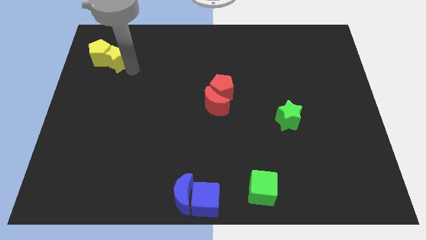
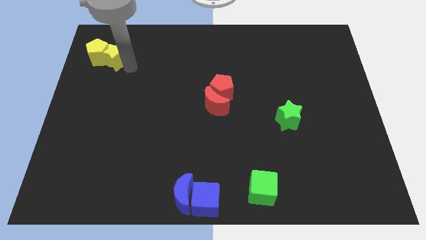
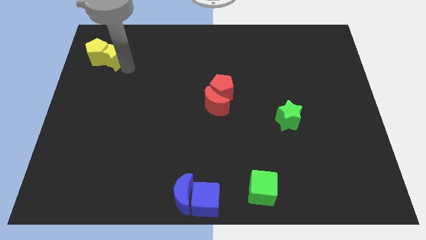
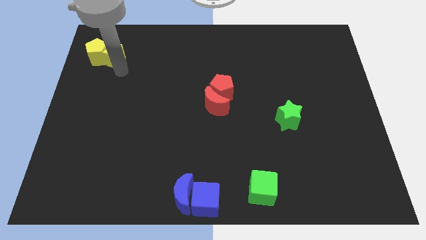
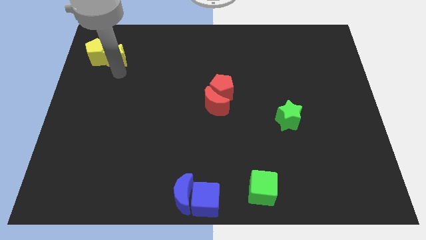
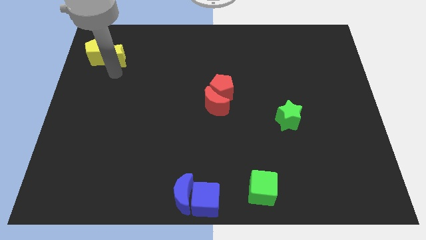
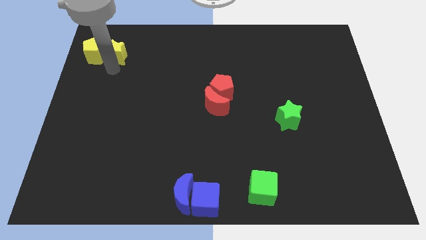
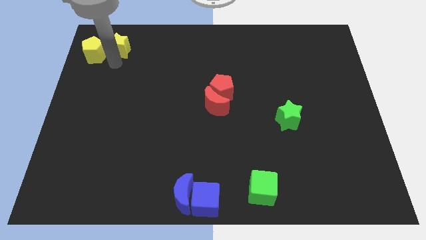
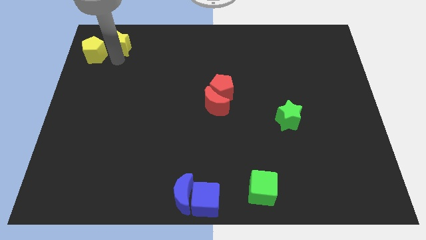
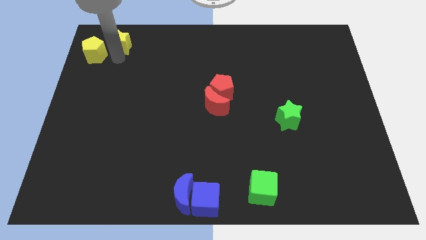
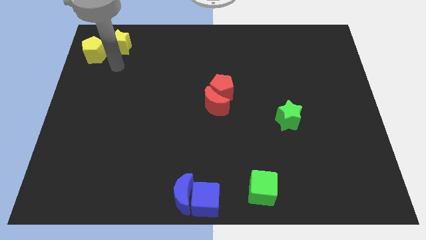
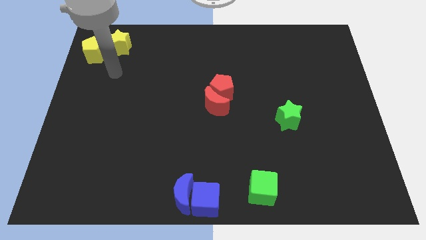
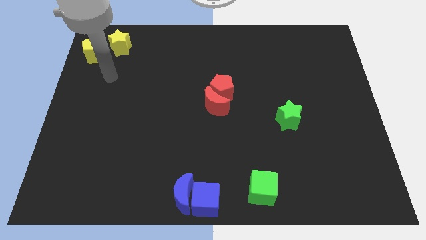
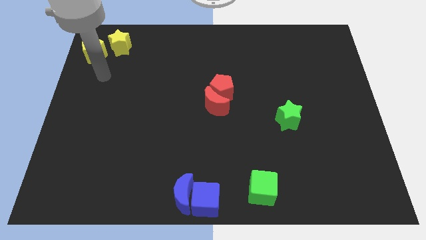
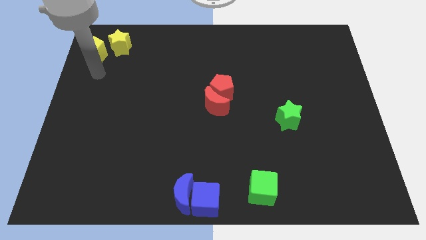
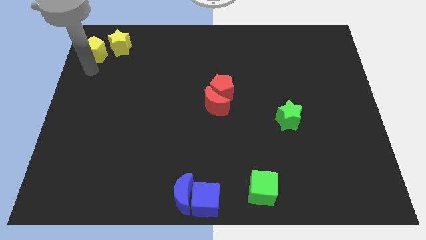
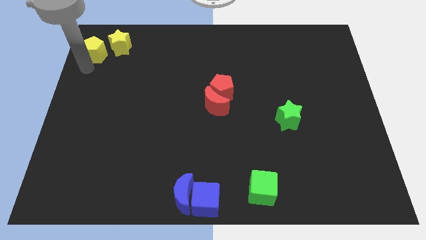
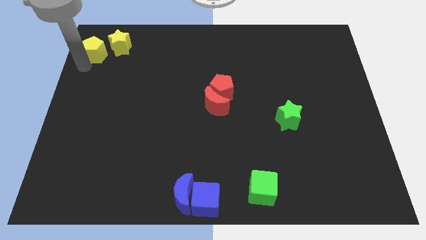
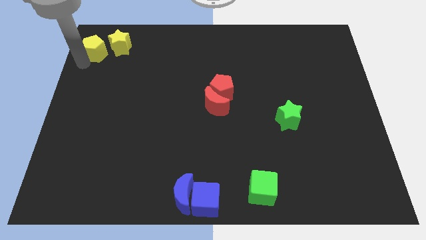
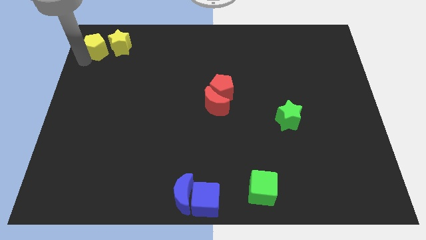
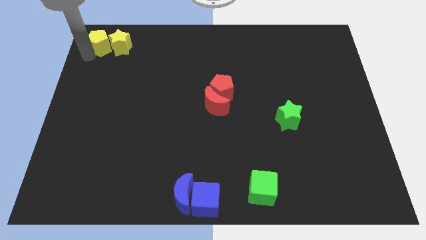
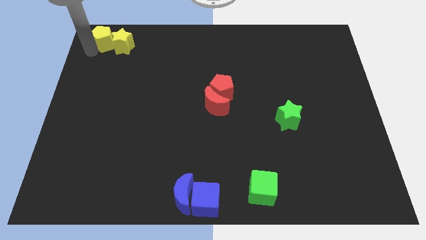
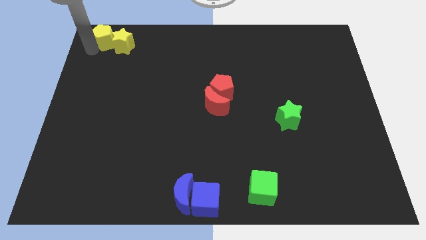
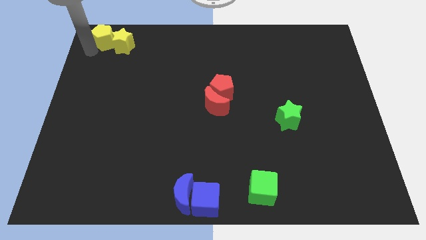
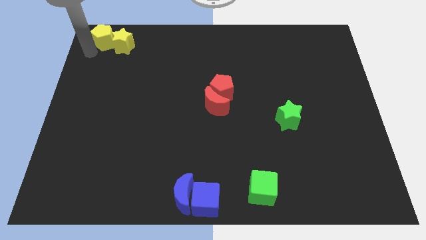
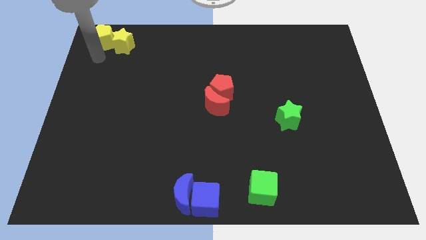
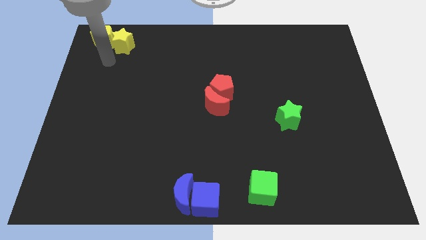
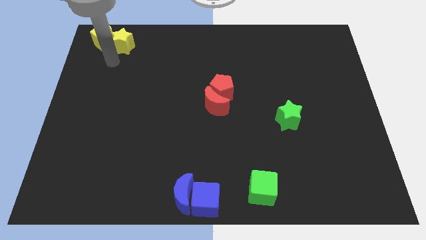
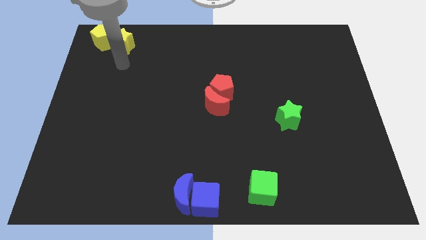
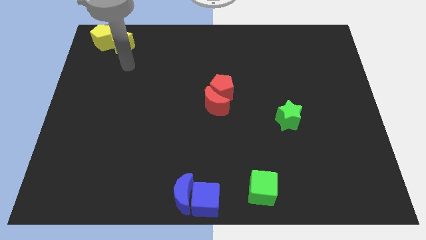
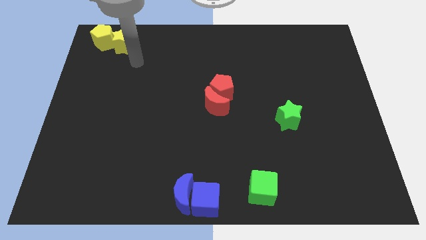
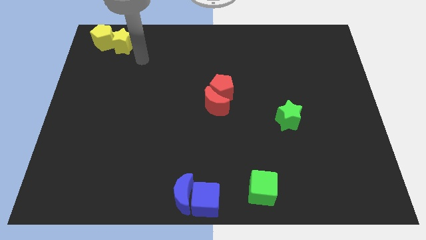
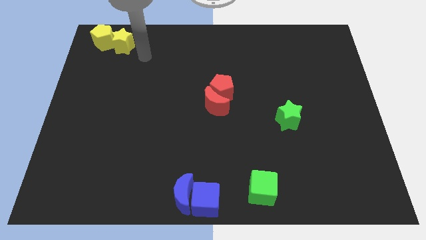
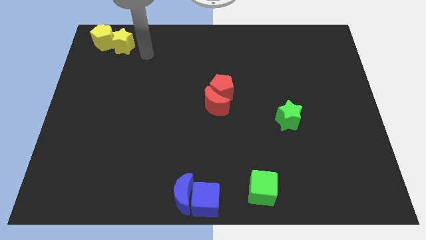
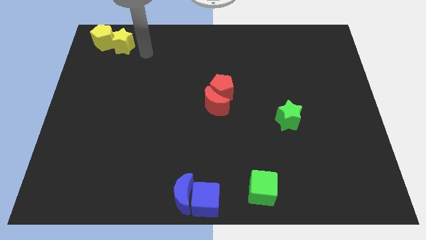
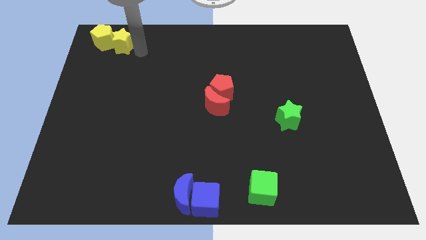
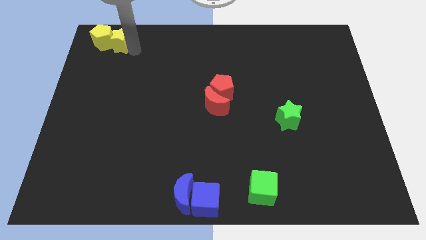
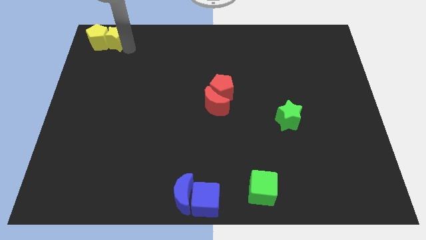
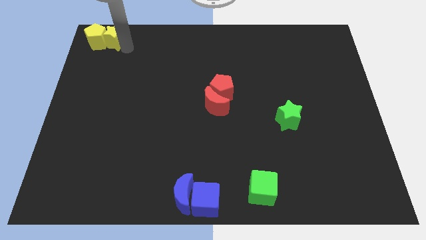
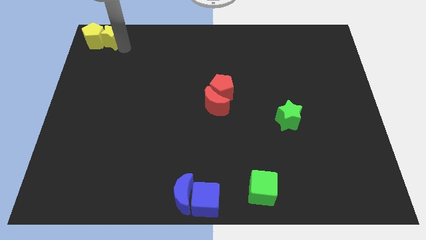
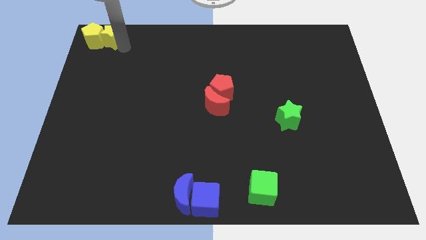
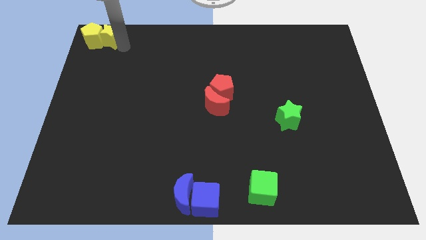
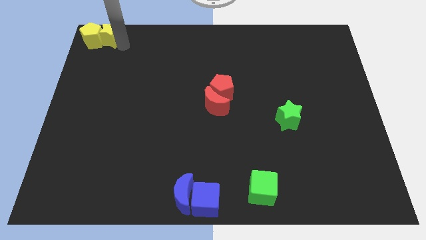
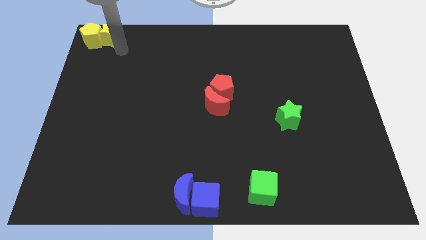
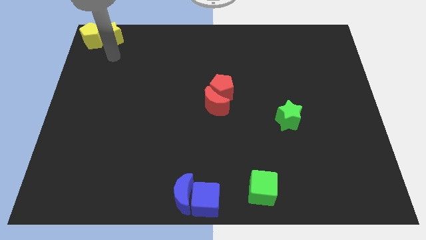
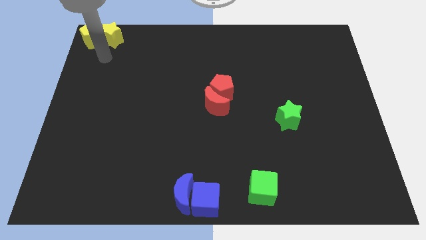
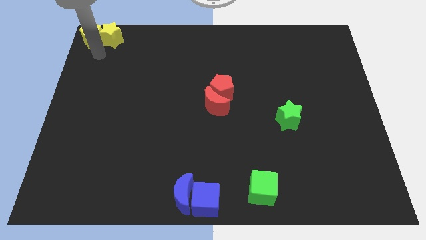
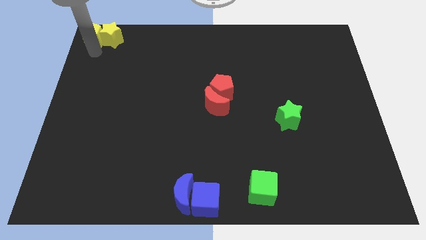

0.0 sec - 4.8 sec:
push the yellow star along with yellow pentagon to the top left corner of the board

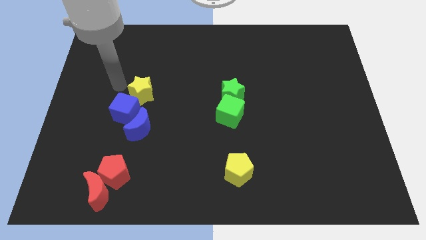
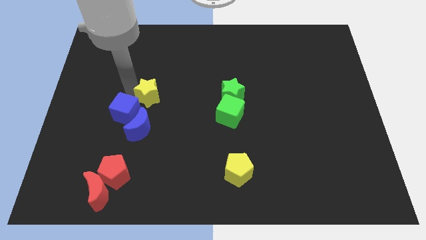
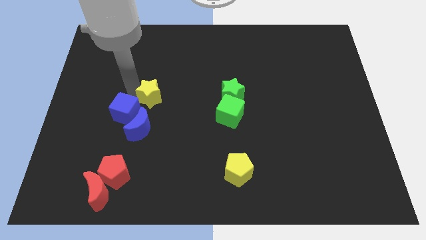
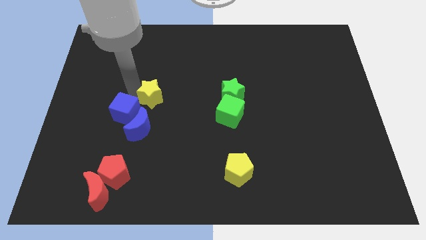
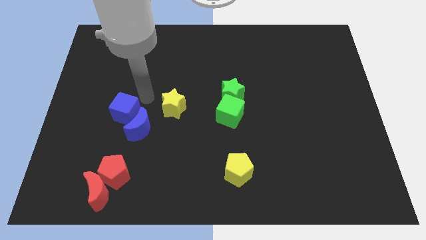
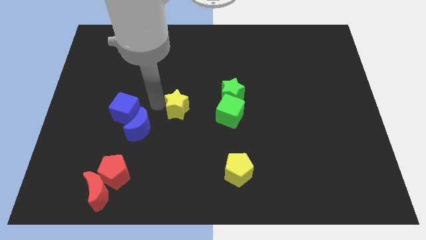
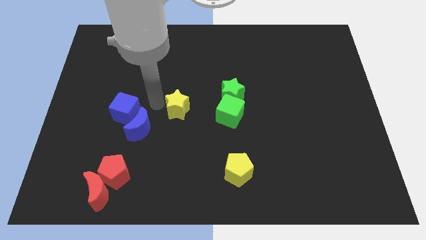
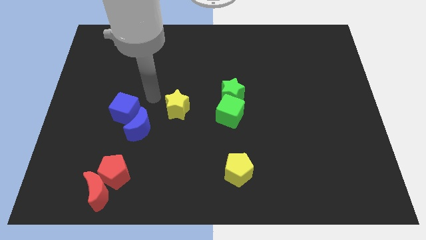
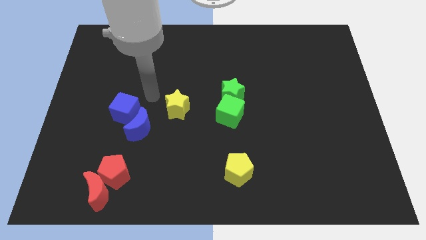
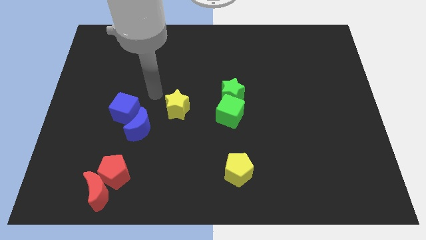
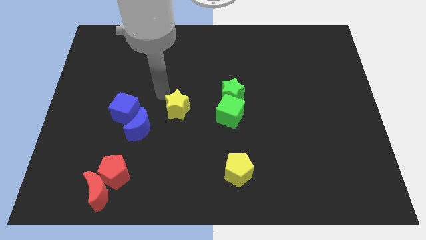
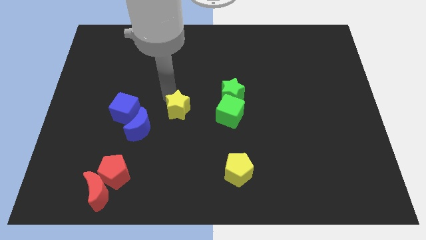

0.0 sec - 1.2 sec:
push the yellow star towards the green cube

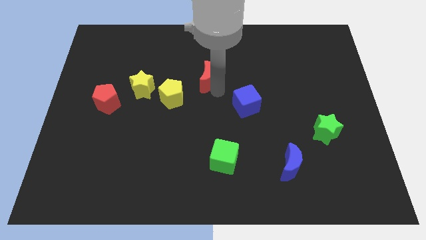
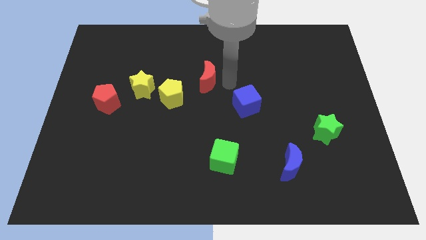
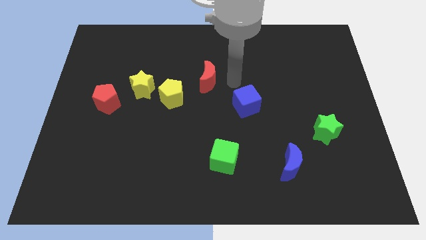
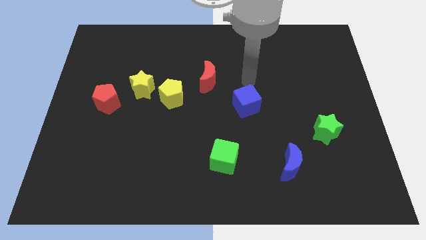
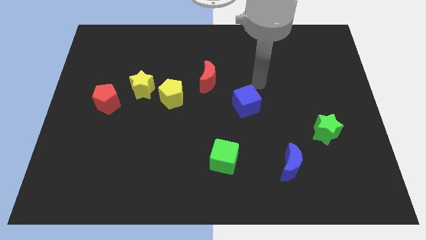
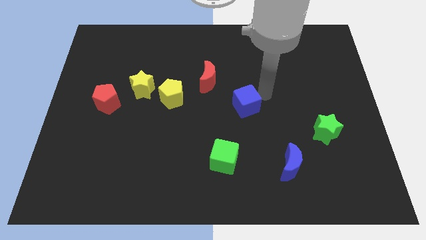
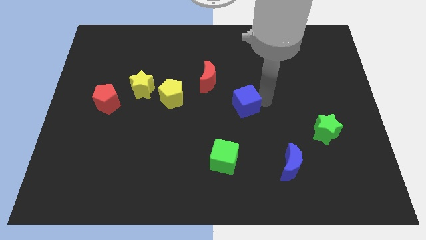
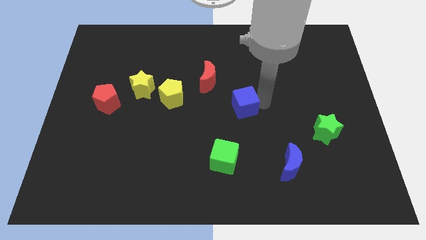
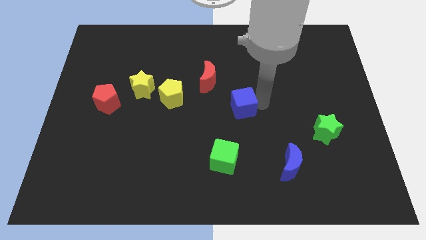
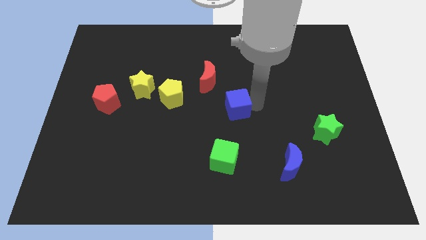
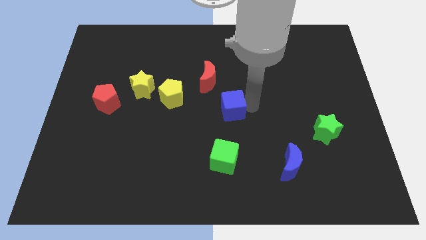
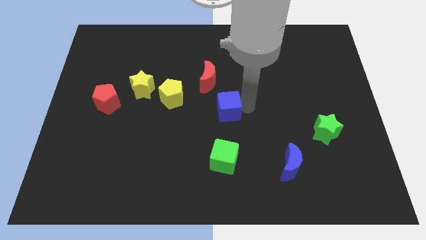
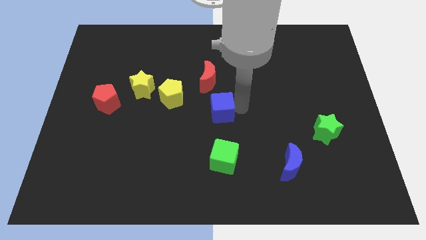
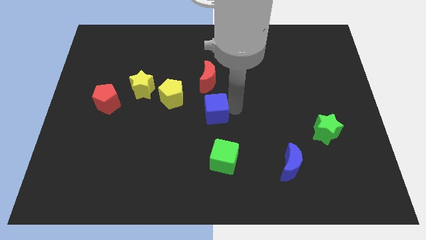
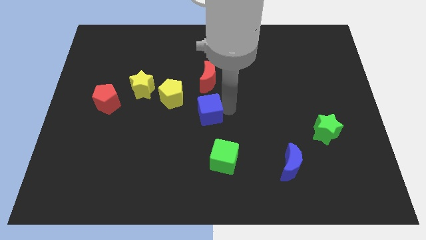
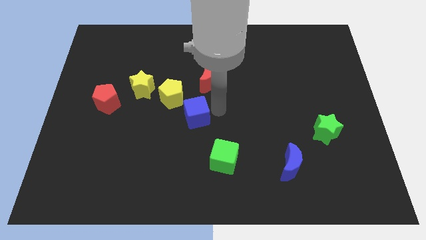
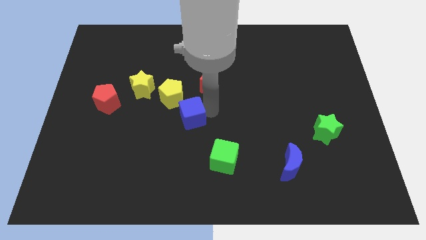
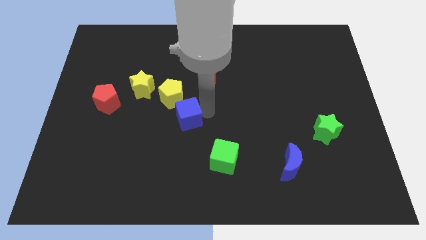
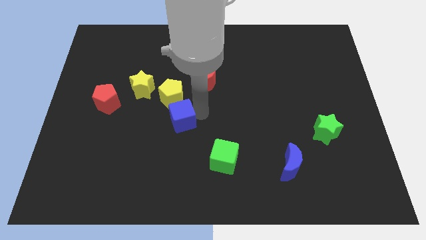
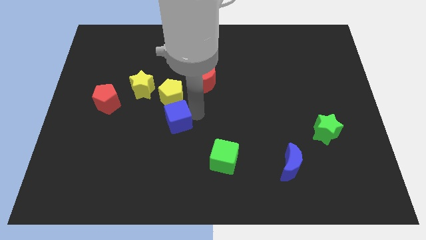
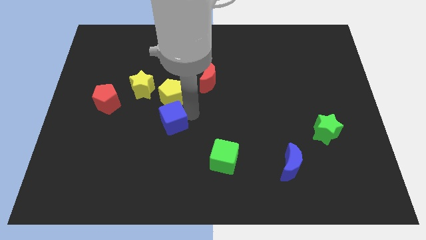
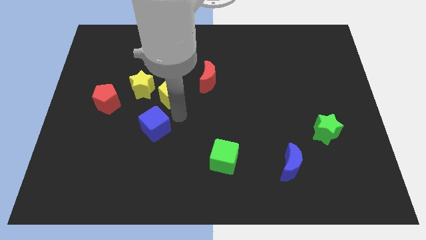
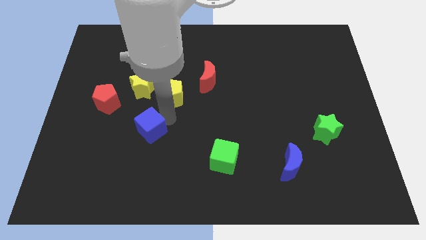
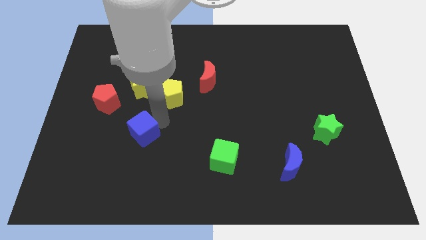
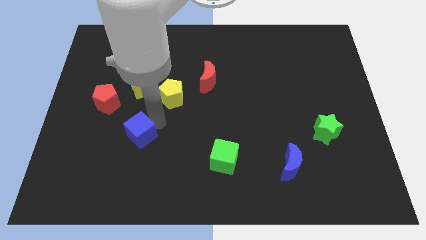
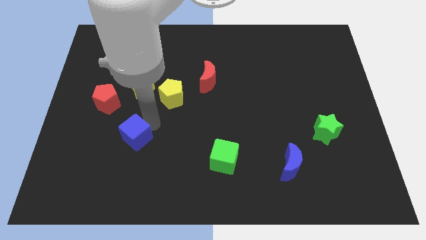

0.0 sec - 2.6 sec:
move the blue cube to bottom of the yellow pentagon

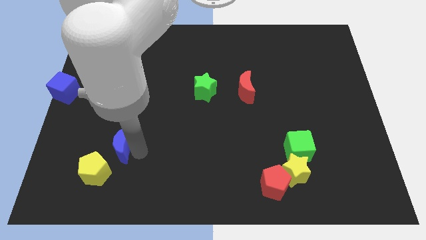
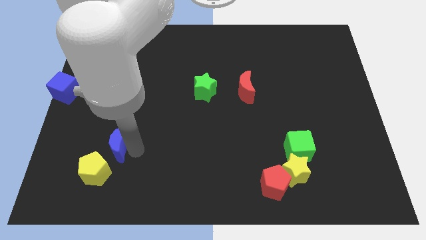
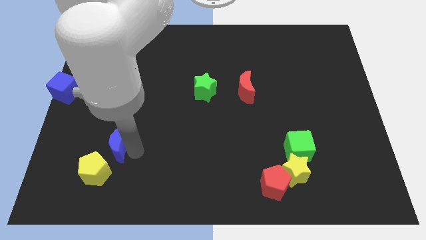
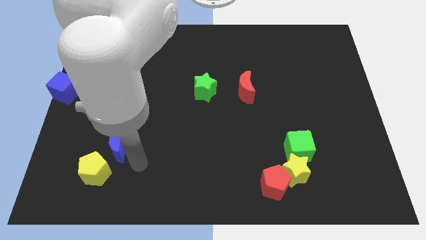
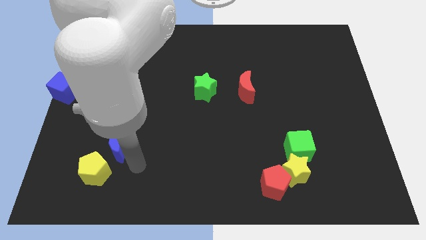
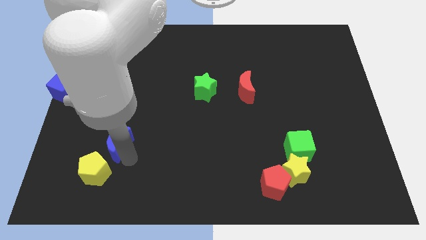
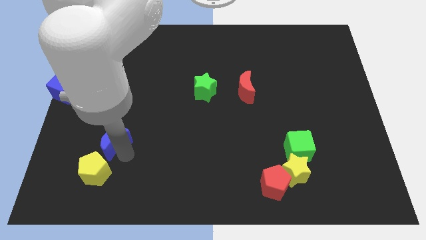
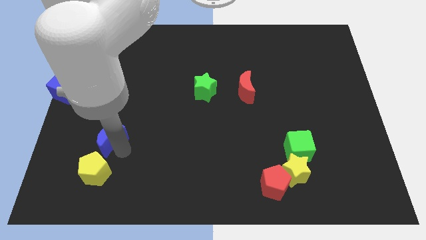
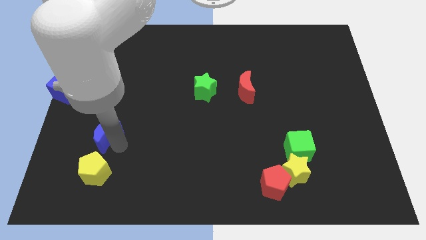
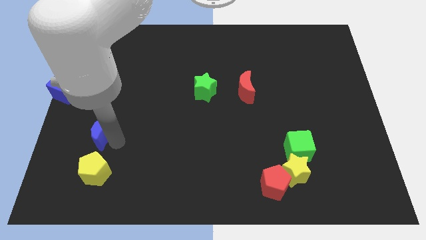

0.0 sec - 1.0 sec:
put blue crescent above yellow pentagon
